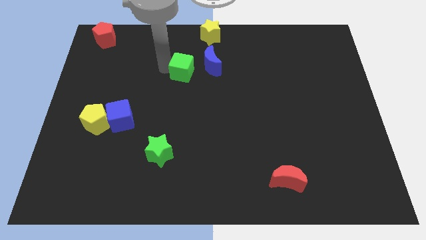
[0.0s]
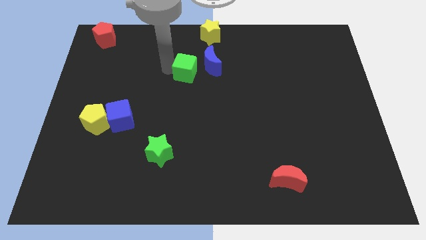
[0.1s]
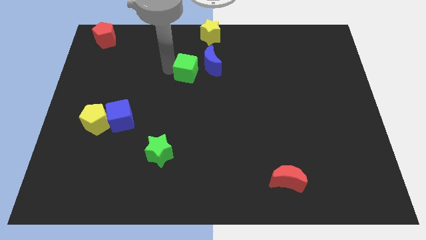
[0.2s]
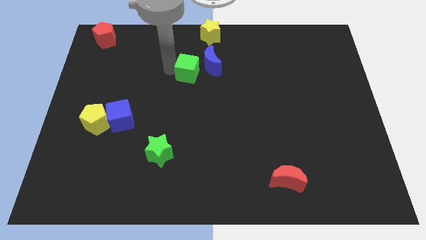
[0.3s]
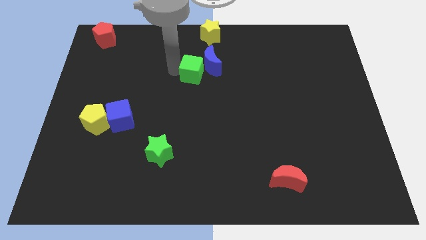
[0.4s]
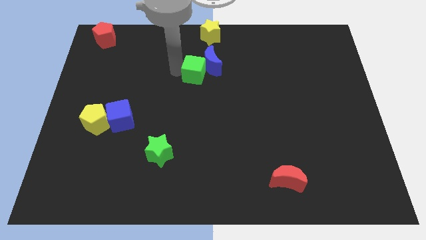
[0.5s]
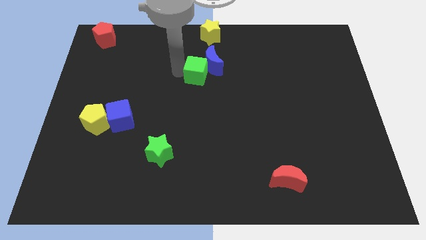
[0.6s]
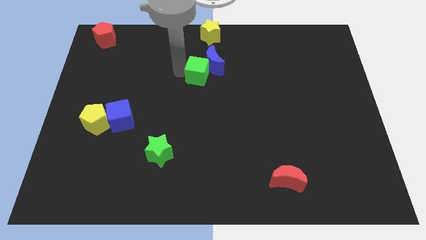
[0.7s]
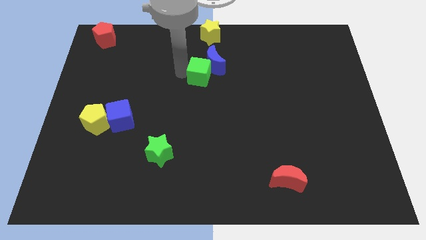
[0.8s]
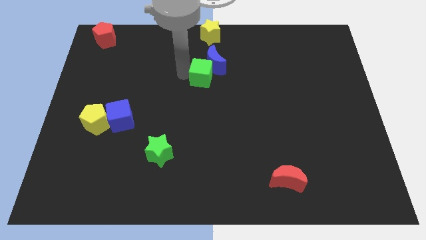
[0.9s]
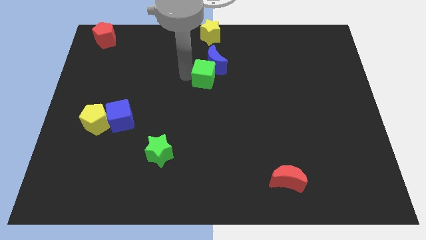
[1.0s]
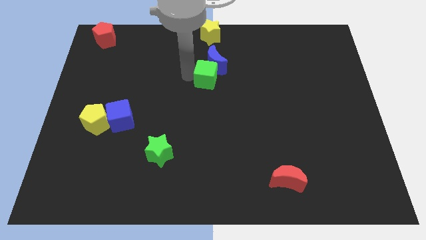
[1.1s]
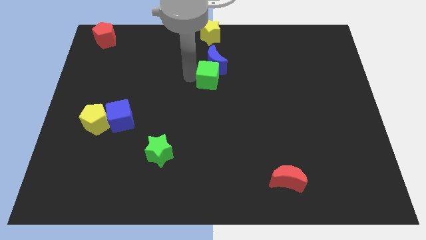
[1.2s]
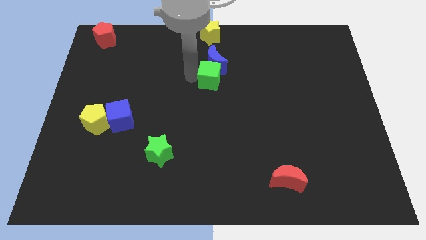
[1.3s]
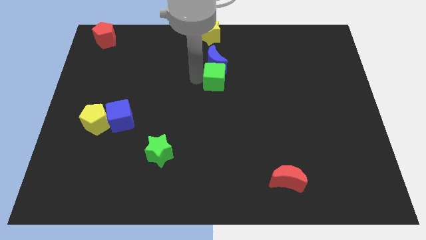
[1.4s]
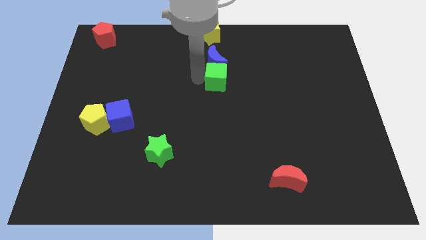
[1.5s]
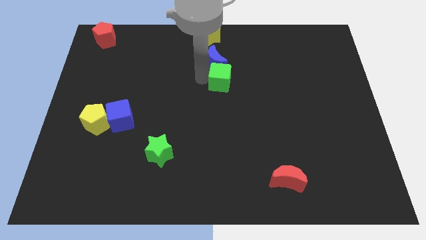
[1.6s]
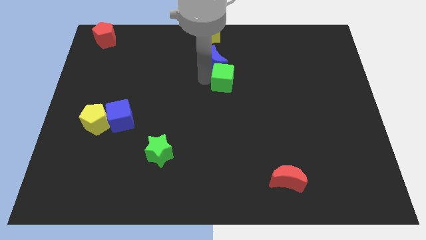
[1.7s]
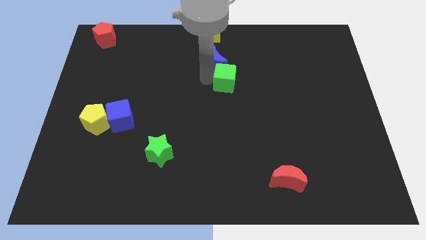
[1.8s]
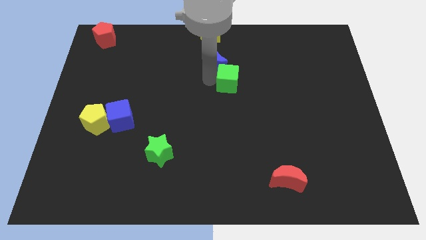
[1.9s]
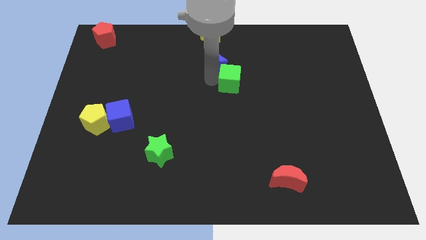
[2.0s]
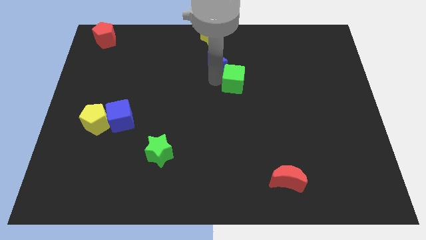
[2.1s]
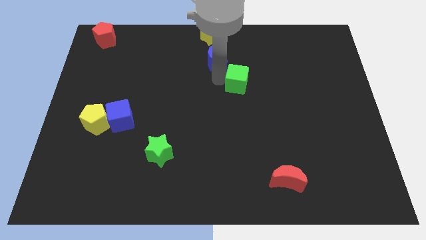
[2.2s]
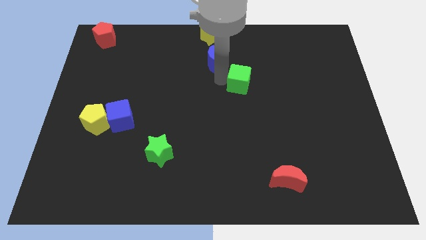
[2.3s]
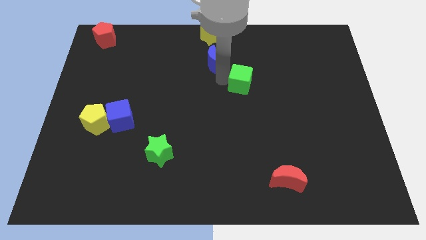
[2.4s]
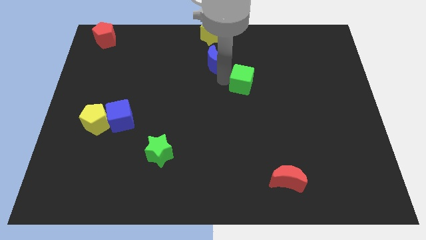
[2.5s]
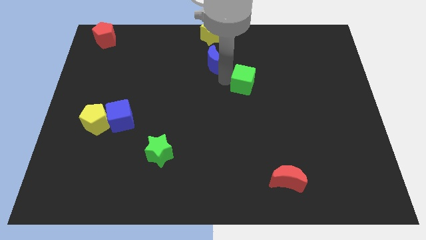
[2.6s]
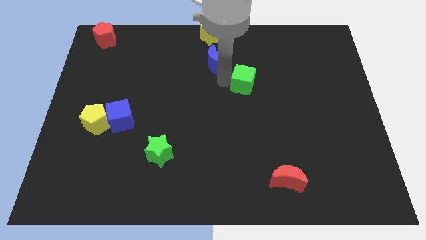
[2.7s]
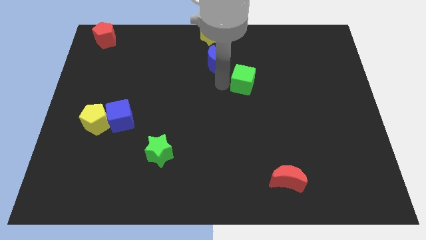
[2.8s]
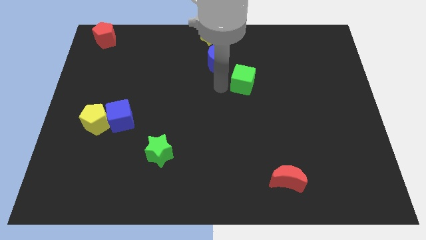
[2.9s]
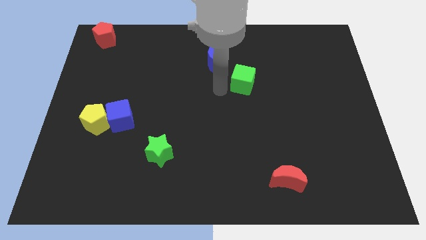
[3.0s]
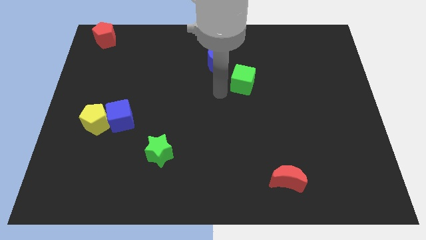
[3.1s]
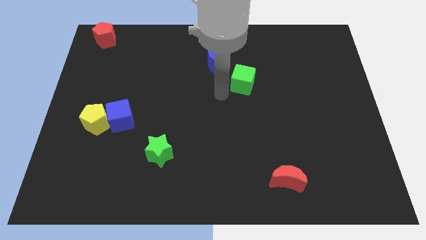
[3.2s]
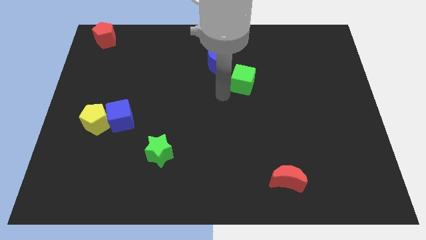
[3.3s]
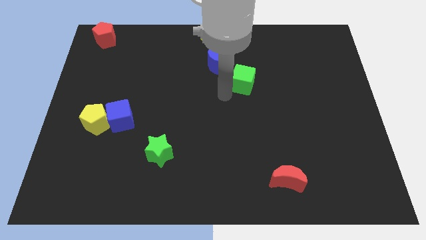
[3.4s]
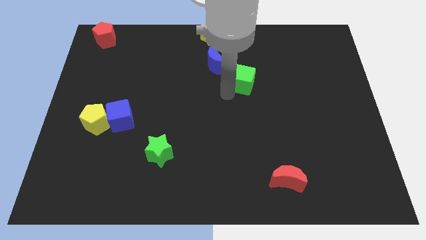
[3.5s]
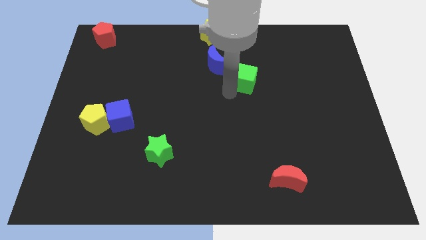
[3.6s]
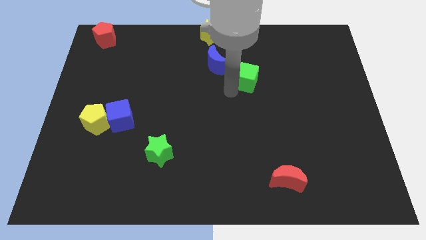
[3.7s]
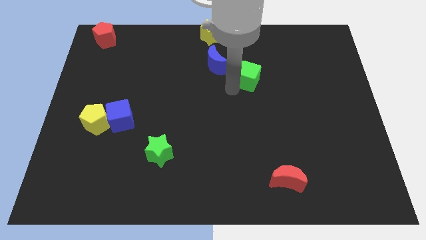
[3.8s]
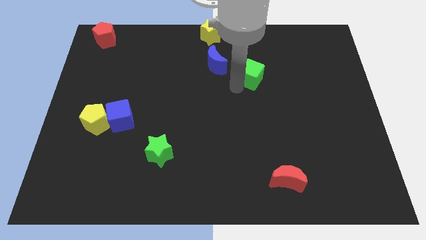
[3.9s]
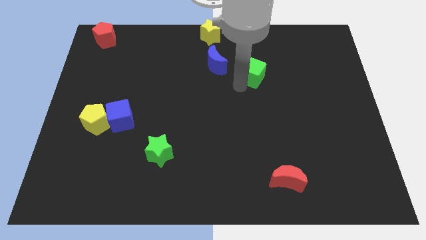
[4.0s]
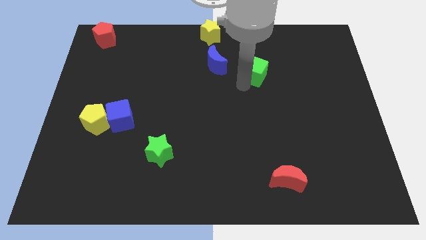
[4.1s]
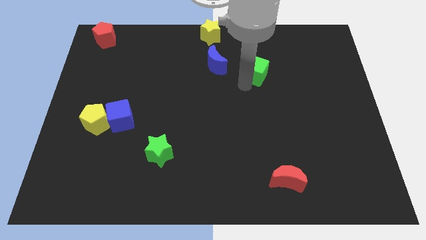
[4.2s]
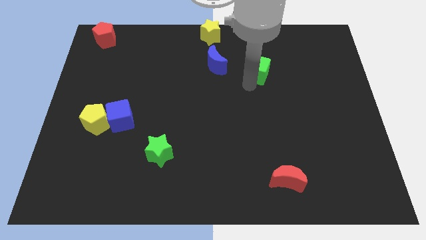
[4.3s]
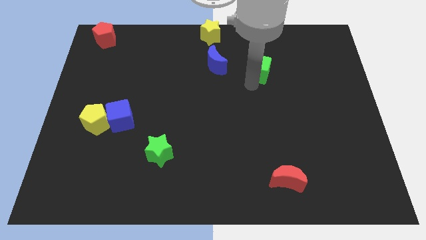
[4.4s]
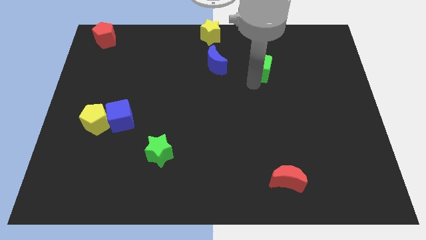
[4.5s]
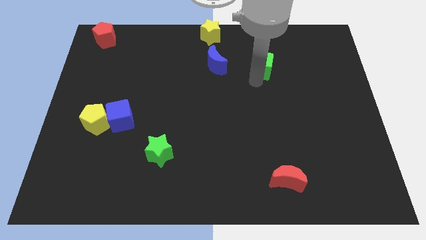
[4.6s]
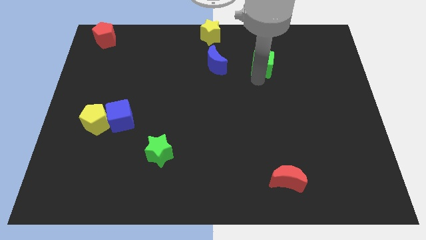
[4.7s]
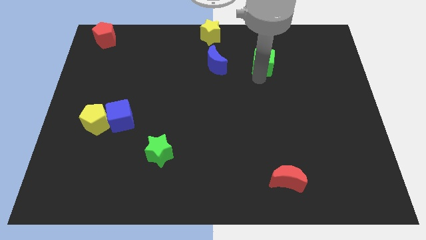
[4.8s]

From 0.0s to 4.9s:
place the green cube to the right of blue moon

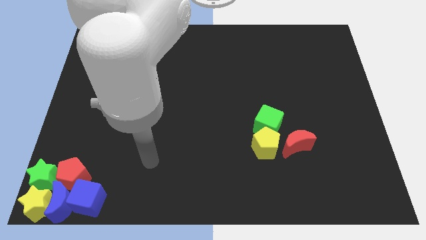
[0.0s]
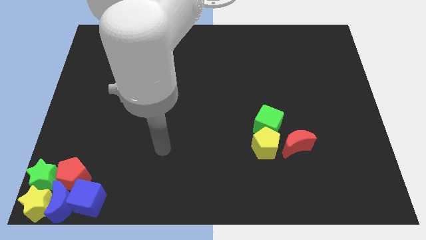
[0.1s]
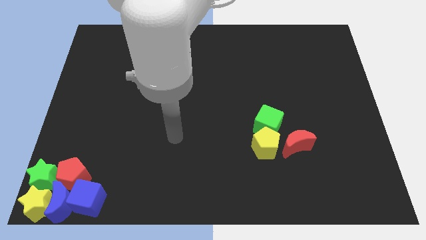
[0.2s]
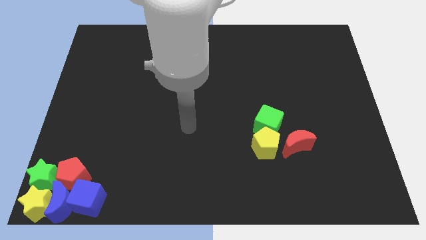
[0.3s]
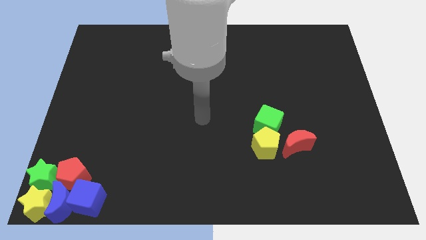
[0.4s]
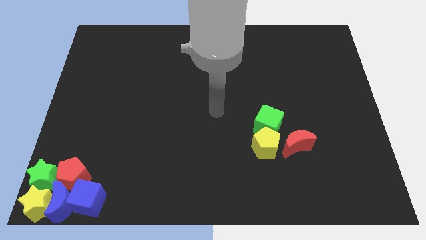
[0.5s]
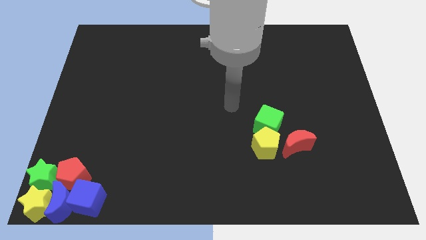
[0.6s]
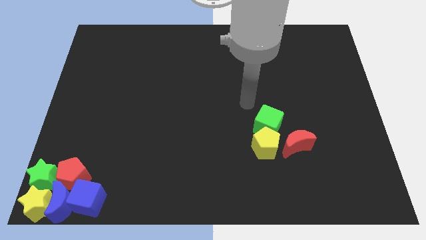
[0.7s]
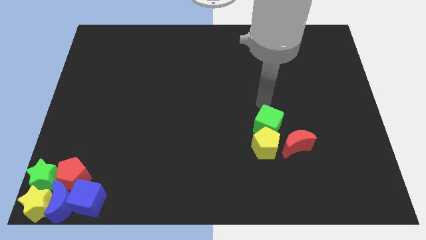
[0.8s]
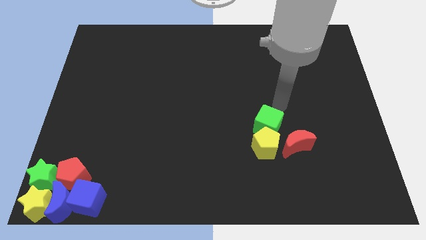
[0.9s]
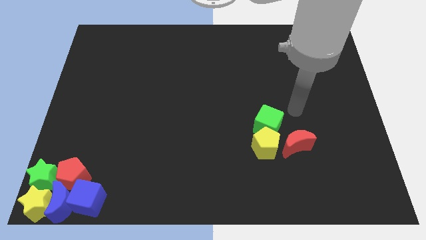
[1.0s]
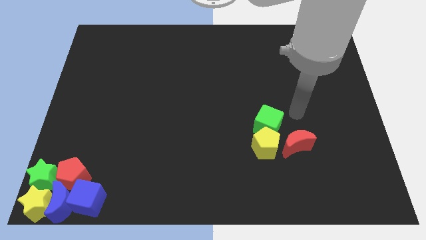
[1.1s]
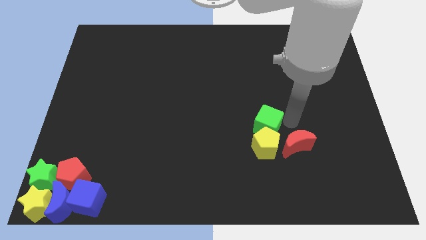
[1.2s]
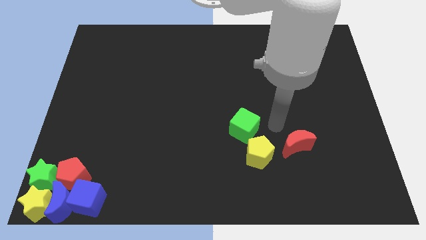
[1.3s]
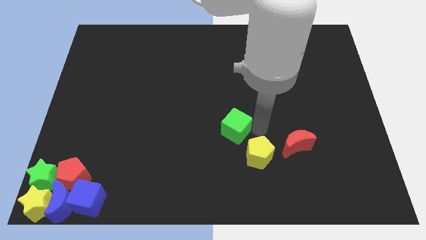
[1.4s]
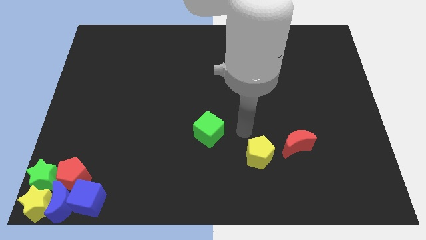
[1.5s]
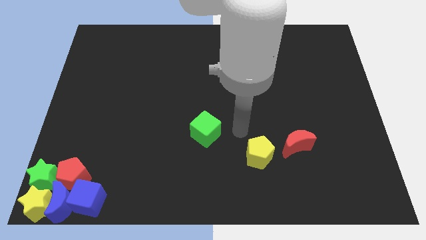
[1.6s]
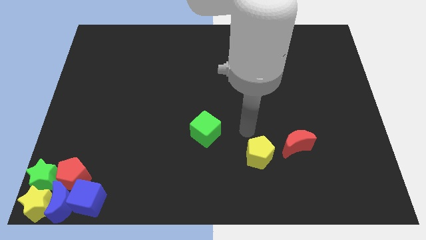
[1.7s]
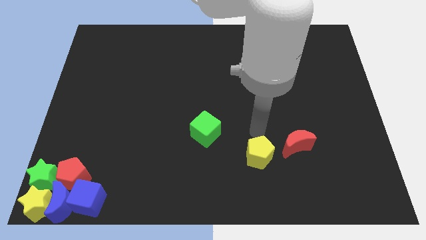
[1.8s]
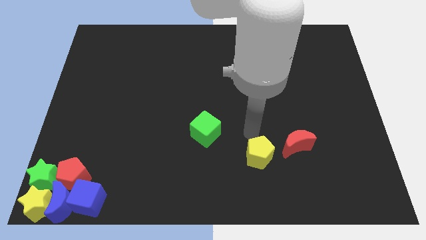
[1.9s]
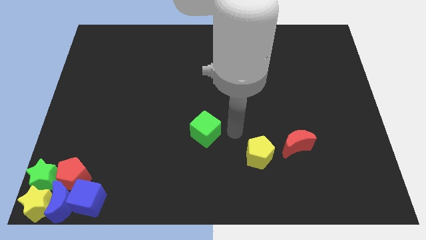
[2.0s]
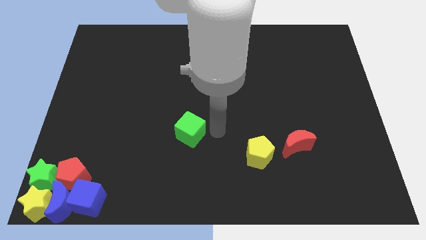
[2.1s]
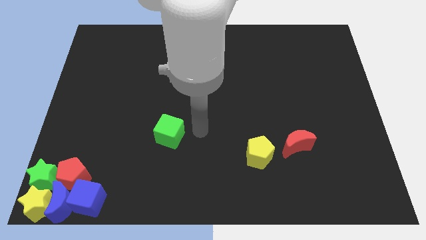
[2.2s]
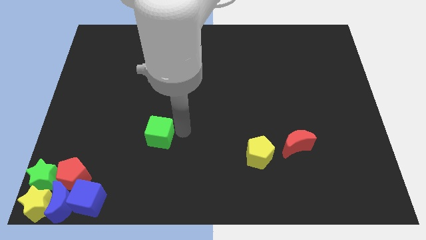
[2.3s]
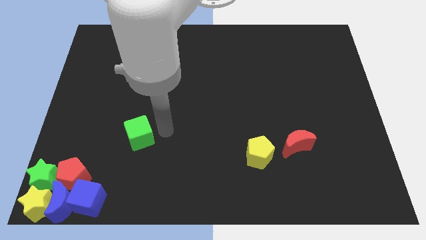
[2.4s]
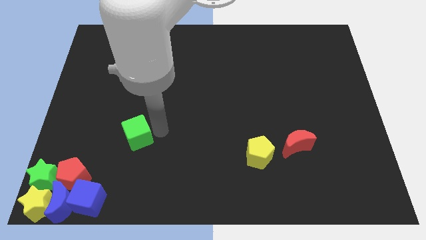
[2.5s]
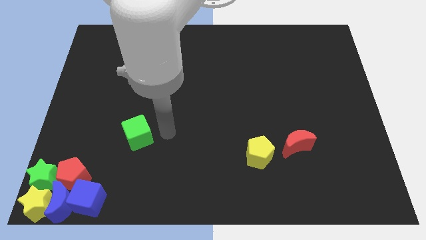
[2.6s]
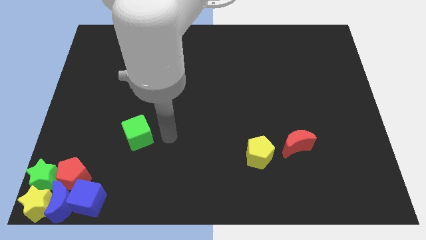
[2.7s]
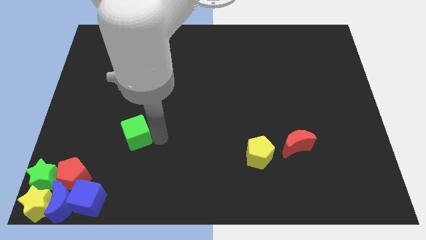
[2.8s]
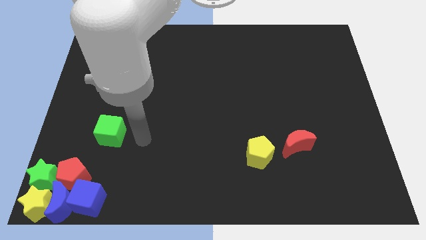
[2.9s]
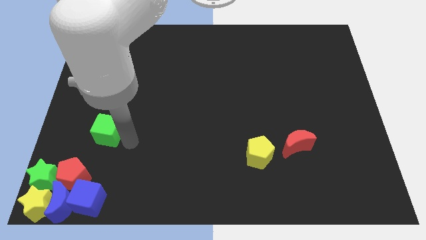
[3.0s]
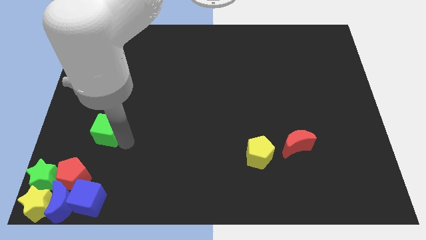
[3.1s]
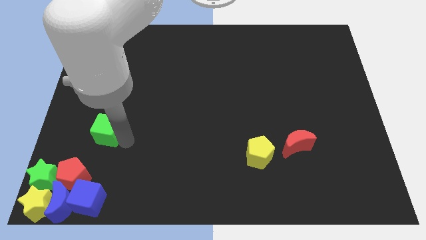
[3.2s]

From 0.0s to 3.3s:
slide the green cube diagonally on the top right side of the red pentagon

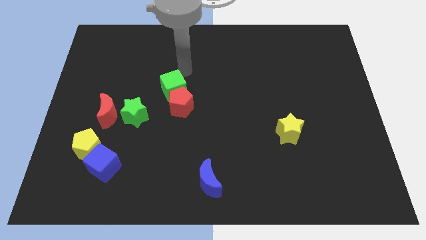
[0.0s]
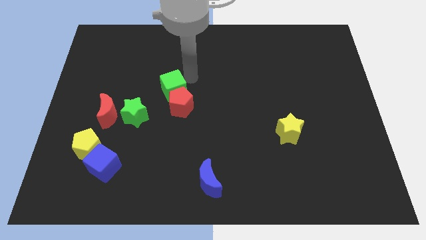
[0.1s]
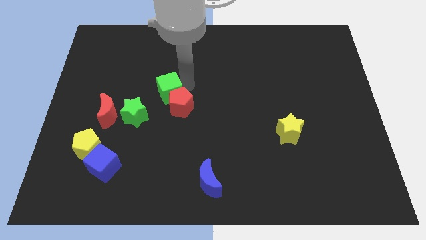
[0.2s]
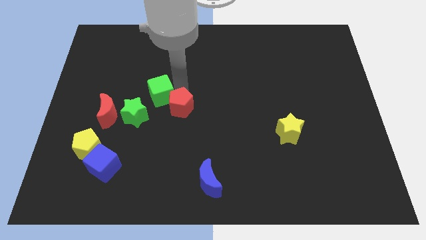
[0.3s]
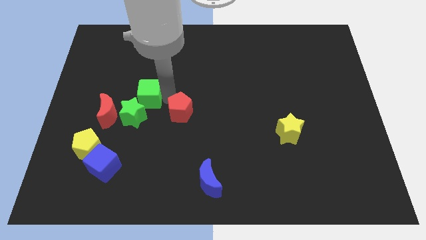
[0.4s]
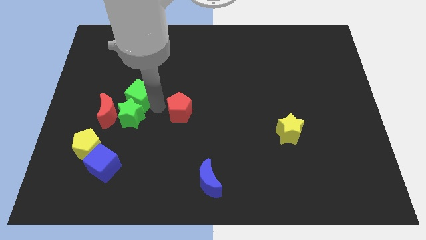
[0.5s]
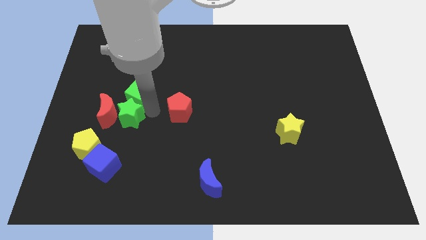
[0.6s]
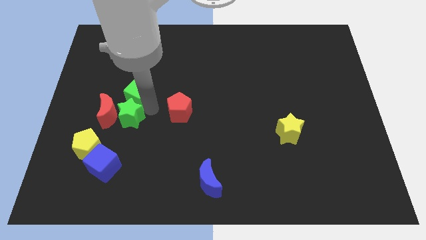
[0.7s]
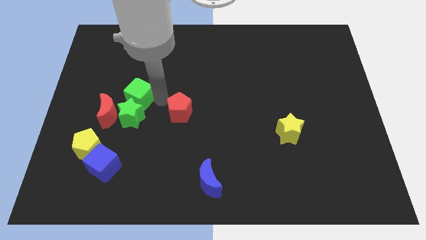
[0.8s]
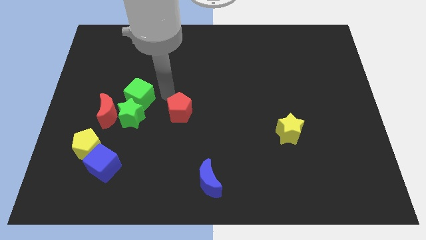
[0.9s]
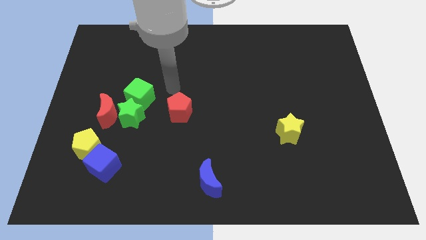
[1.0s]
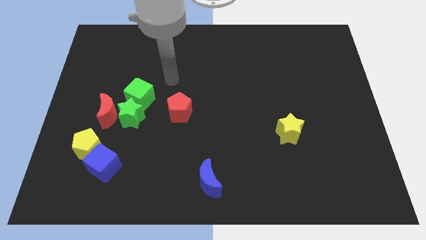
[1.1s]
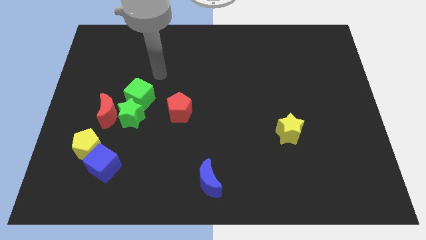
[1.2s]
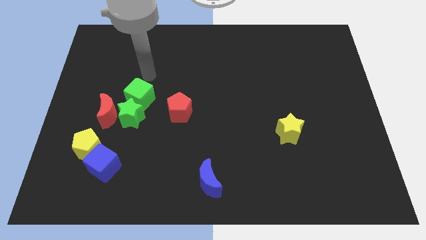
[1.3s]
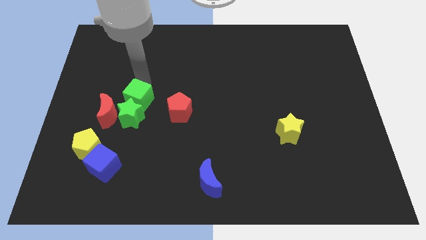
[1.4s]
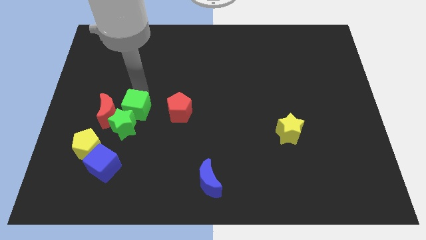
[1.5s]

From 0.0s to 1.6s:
push the green cube towards the green star
